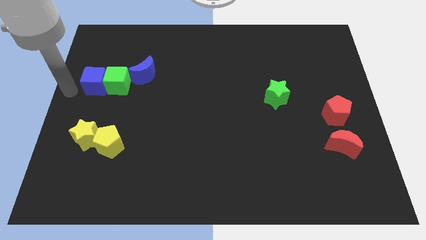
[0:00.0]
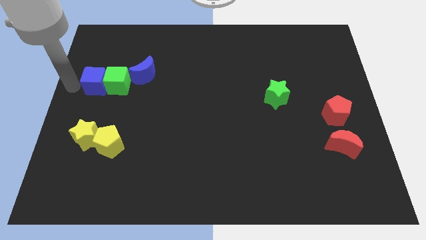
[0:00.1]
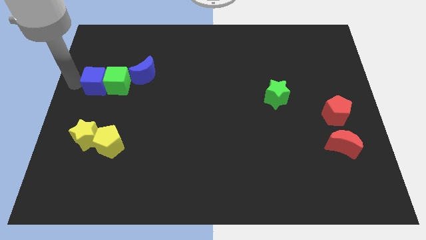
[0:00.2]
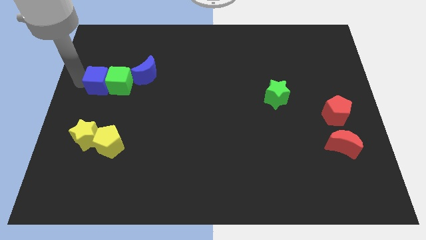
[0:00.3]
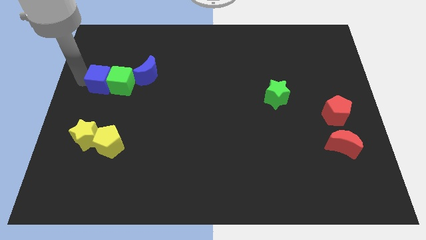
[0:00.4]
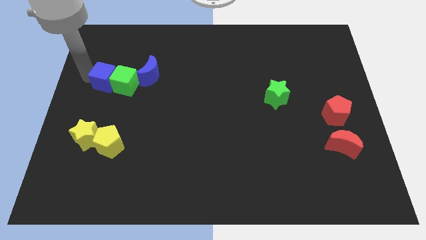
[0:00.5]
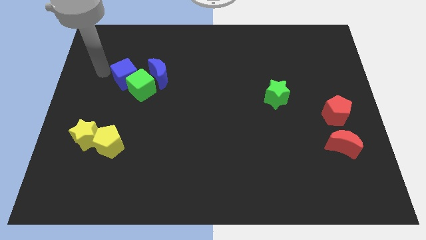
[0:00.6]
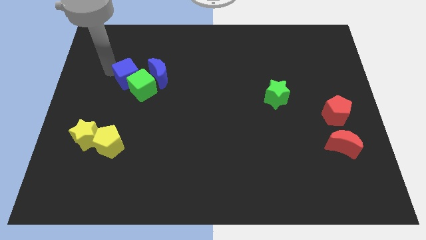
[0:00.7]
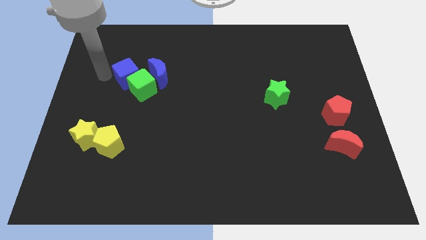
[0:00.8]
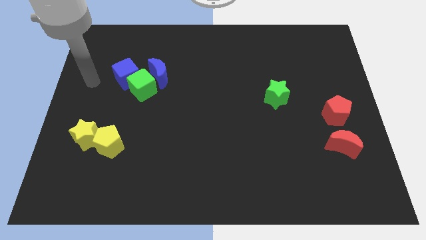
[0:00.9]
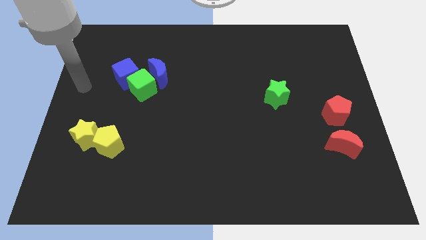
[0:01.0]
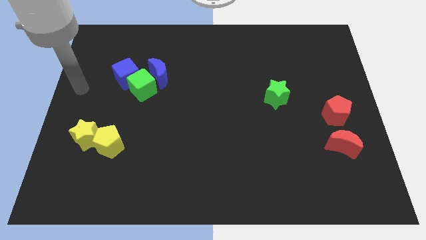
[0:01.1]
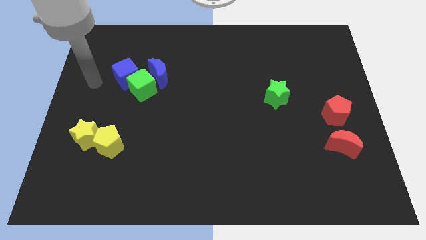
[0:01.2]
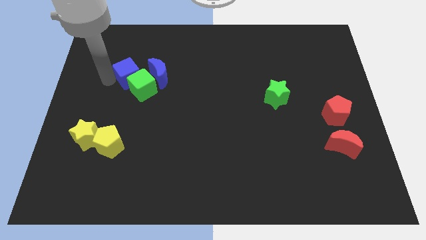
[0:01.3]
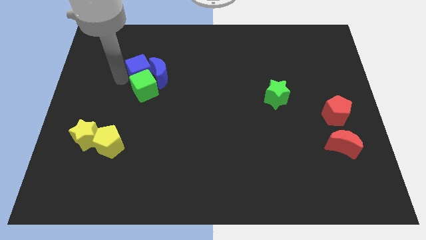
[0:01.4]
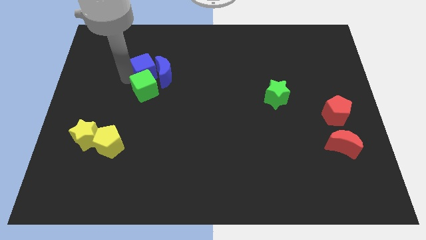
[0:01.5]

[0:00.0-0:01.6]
push the cubes into blue moon above yellow pentagon

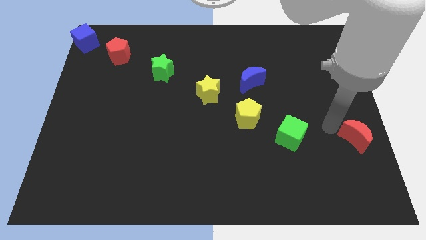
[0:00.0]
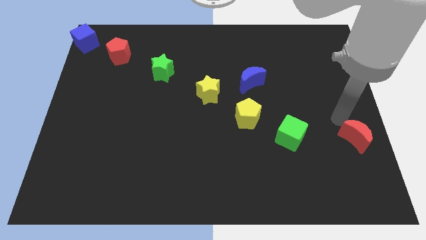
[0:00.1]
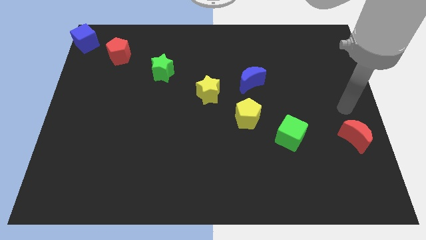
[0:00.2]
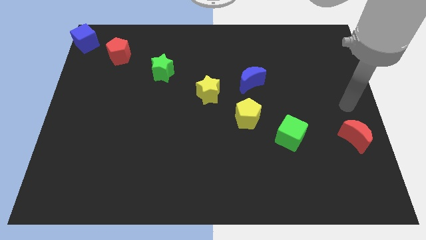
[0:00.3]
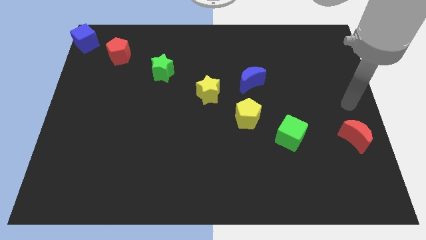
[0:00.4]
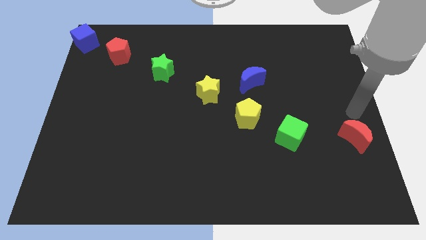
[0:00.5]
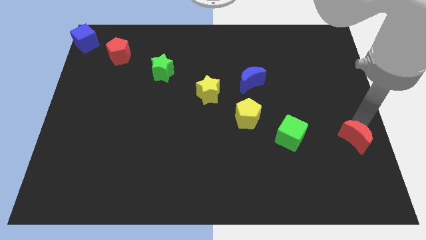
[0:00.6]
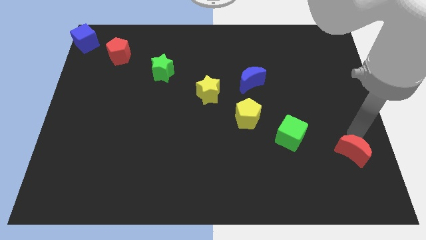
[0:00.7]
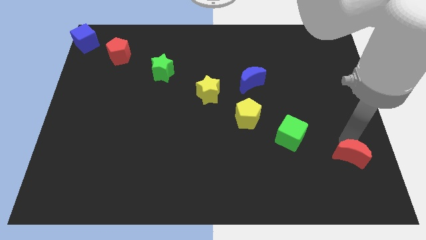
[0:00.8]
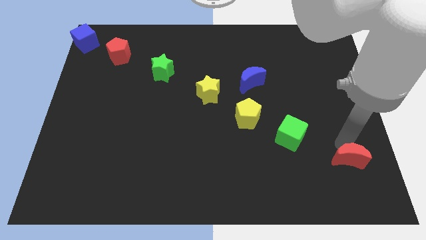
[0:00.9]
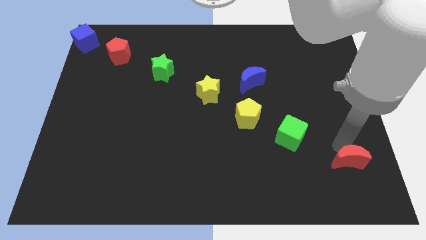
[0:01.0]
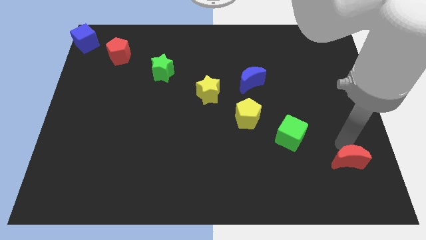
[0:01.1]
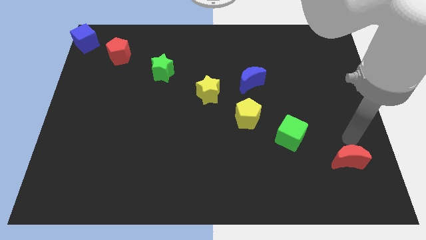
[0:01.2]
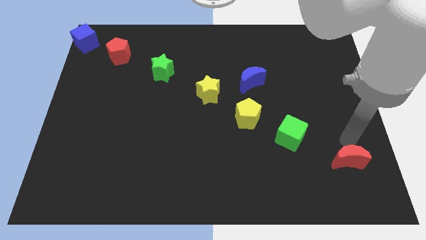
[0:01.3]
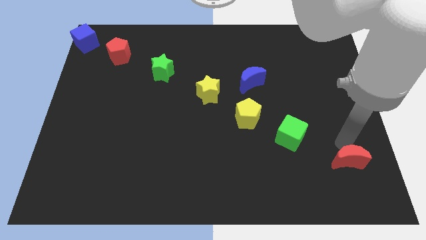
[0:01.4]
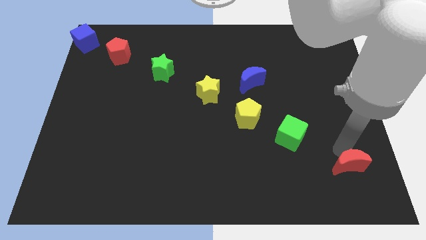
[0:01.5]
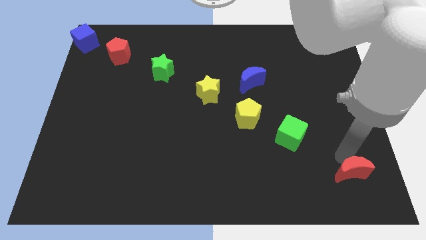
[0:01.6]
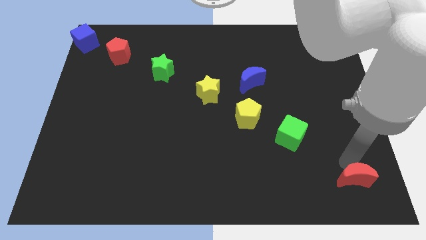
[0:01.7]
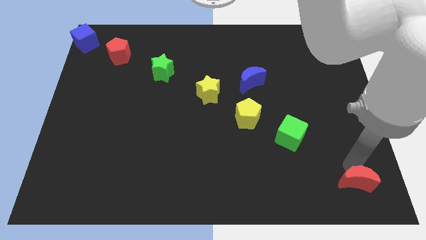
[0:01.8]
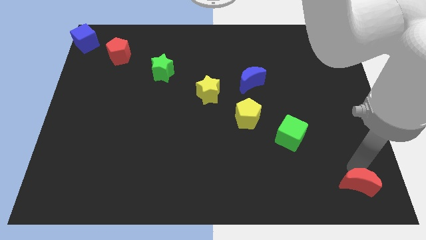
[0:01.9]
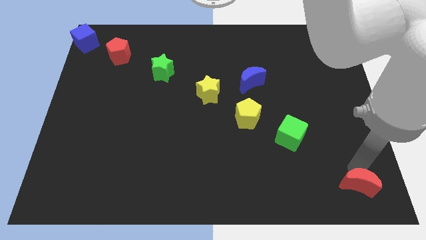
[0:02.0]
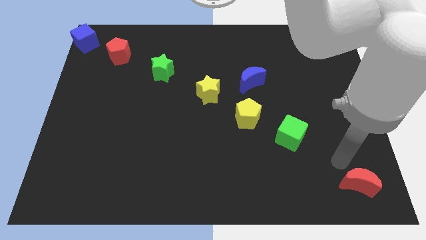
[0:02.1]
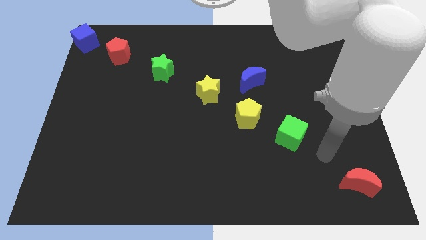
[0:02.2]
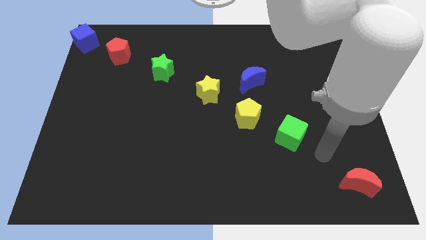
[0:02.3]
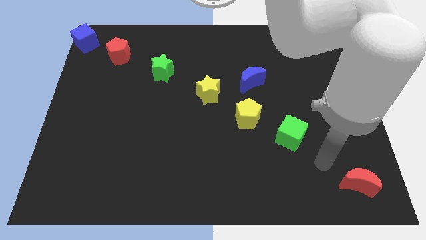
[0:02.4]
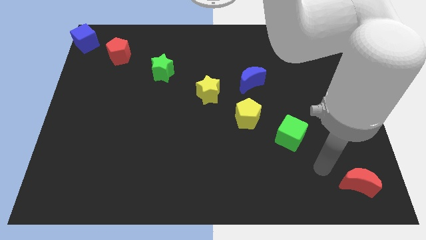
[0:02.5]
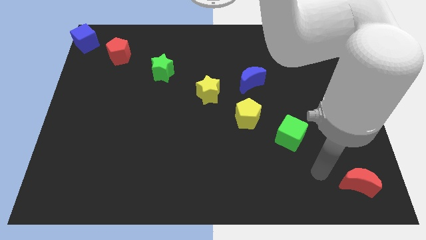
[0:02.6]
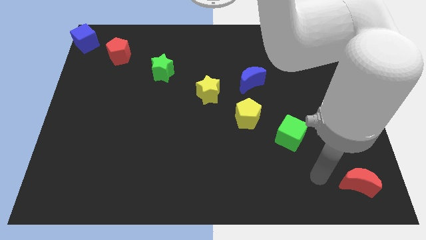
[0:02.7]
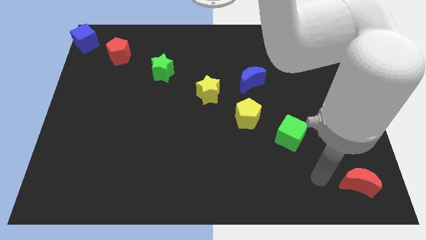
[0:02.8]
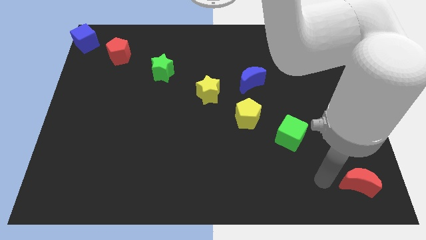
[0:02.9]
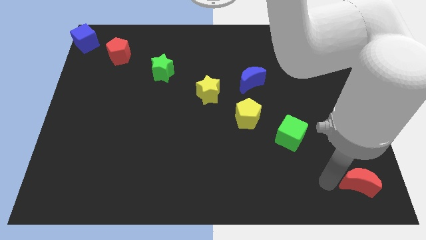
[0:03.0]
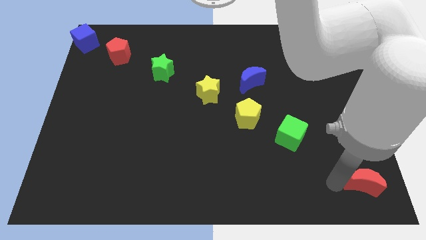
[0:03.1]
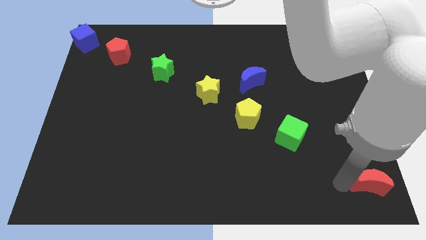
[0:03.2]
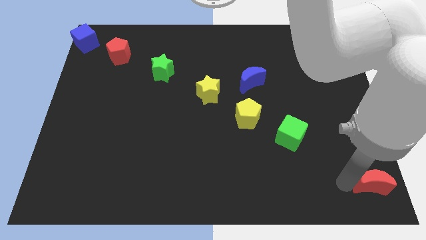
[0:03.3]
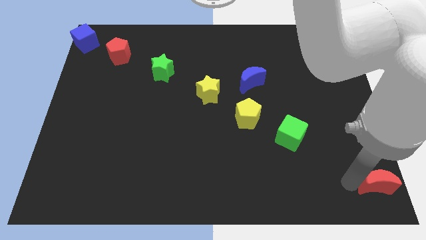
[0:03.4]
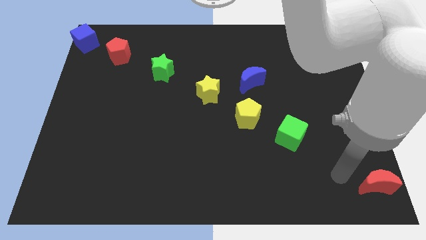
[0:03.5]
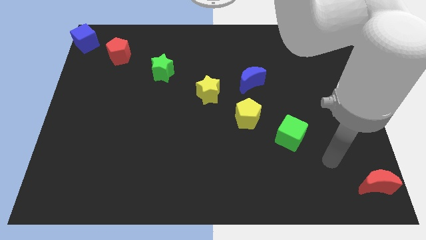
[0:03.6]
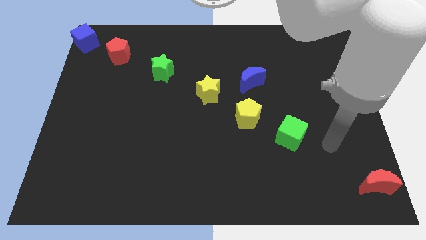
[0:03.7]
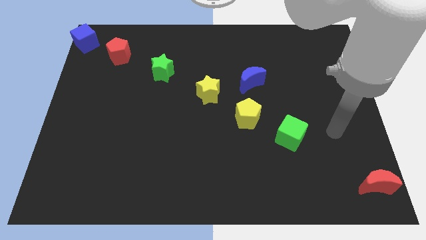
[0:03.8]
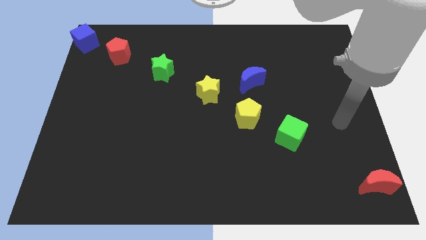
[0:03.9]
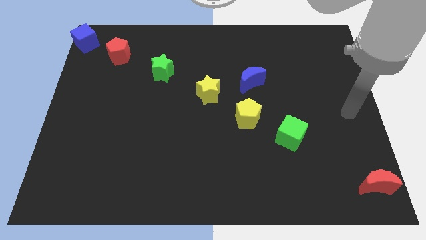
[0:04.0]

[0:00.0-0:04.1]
push the red crescent to the bottom right corner of the board

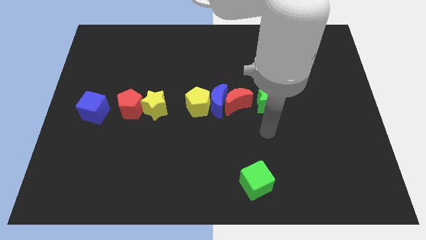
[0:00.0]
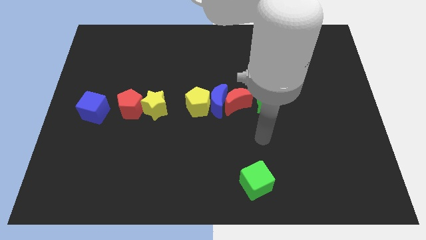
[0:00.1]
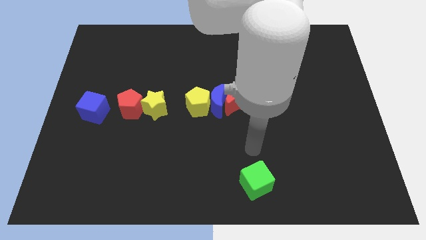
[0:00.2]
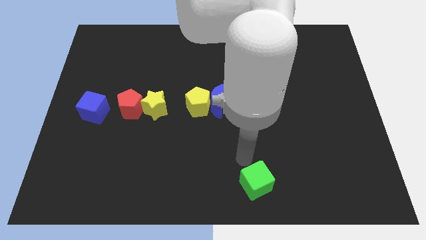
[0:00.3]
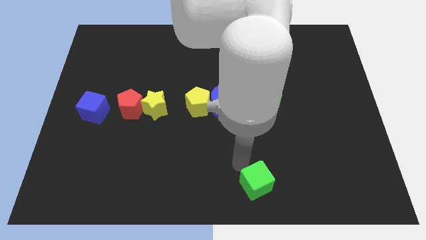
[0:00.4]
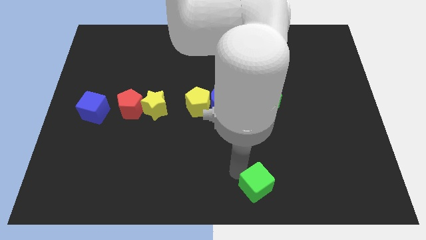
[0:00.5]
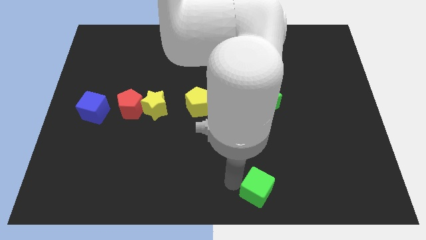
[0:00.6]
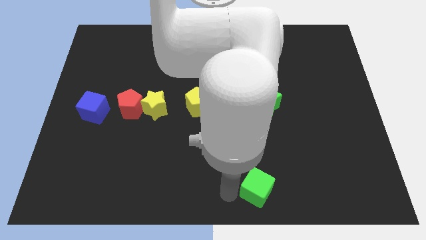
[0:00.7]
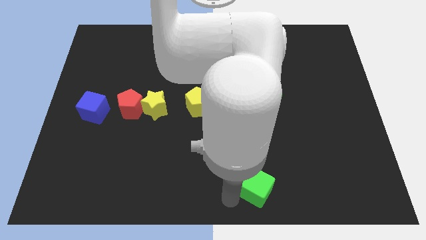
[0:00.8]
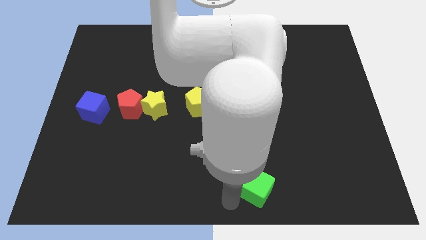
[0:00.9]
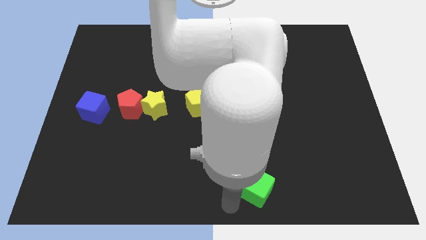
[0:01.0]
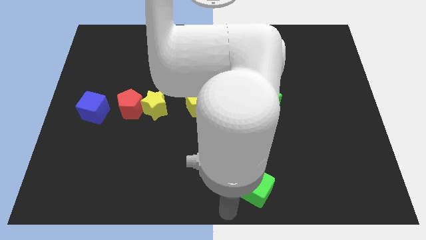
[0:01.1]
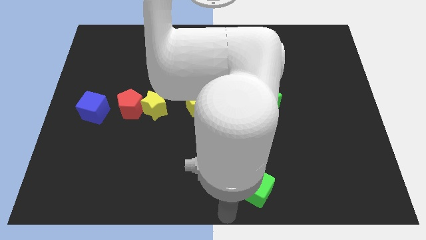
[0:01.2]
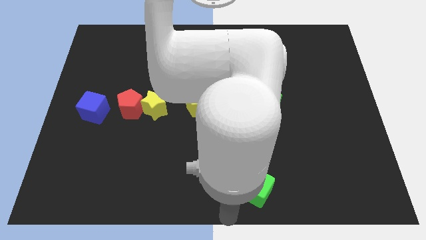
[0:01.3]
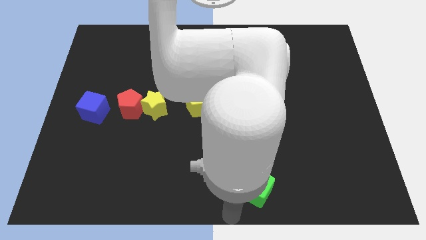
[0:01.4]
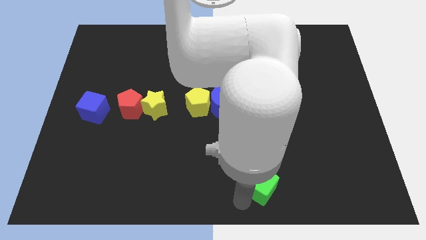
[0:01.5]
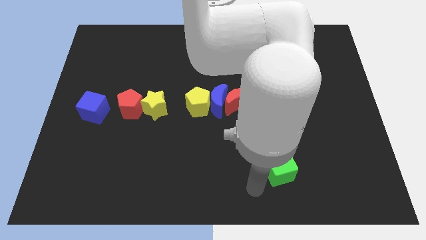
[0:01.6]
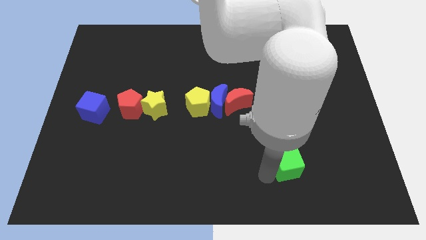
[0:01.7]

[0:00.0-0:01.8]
slightly push the green cube upwards

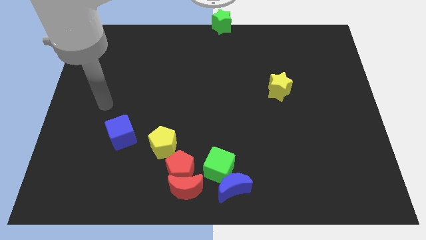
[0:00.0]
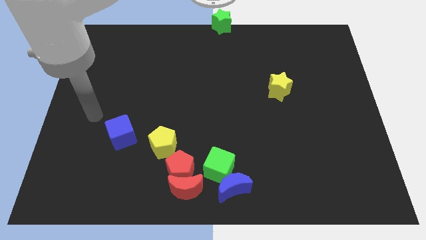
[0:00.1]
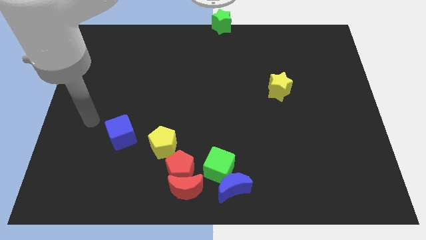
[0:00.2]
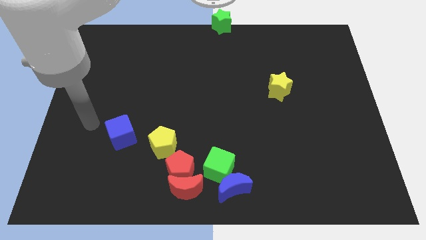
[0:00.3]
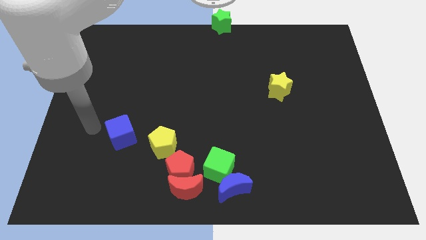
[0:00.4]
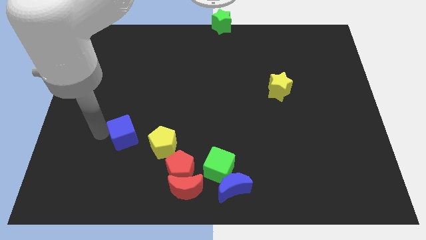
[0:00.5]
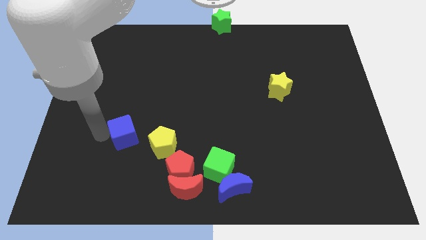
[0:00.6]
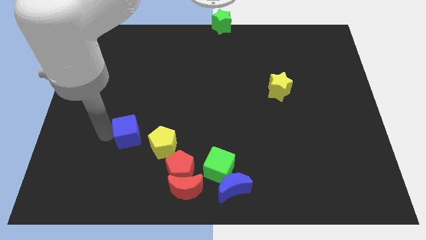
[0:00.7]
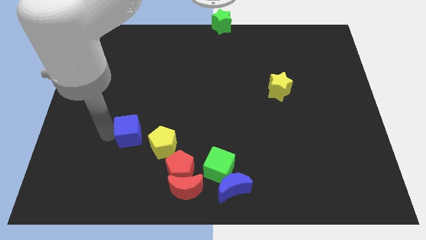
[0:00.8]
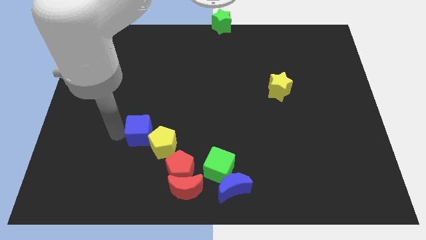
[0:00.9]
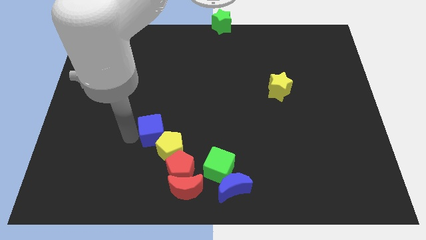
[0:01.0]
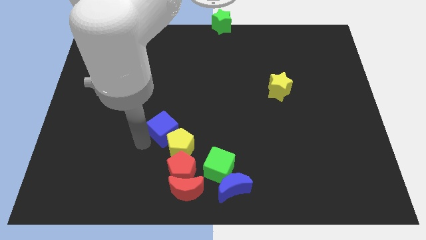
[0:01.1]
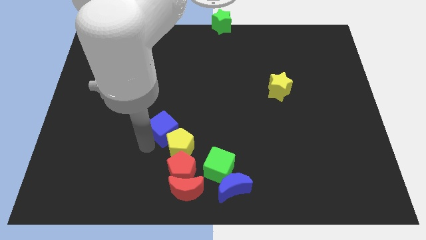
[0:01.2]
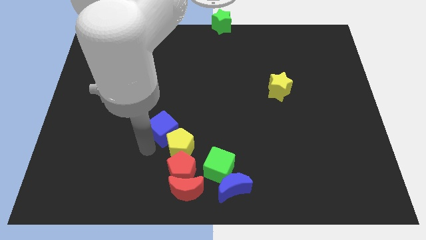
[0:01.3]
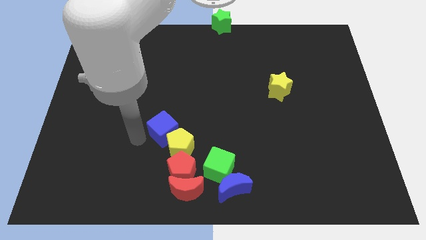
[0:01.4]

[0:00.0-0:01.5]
move the blue cube into the yellow pentagon

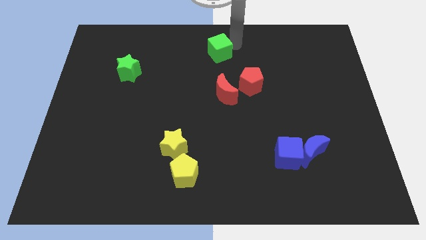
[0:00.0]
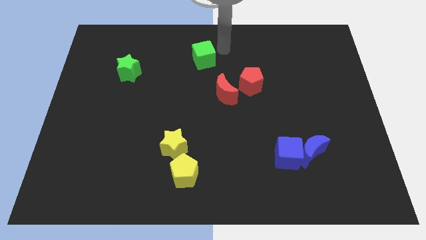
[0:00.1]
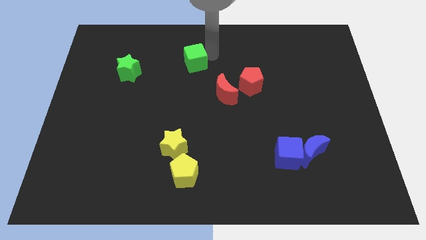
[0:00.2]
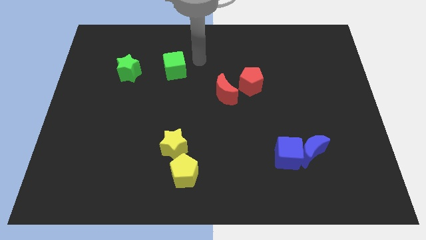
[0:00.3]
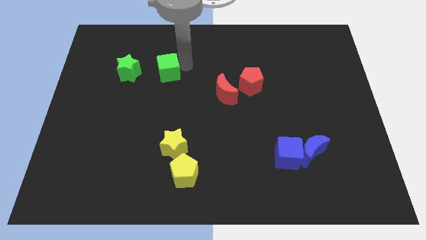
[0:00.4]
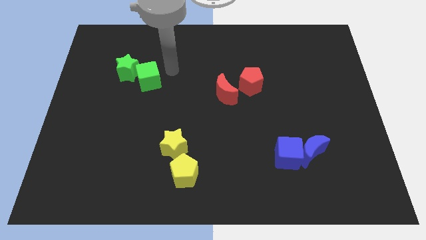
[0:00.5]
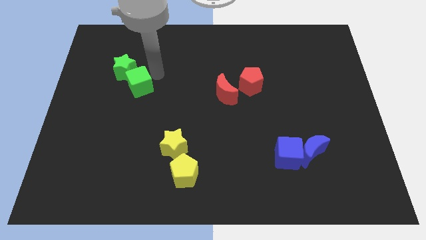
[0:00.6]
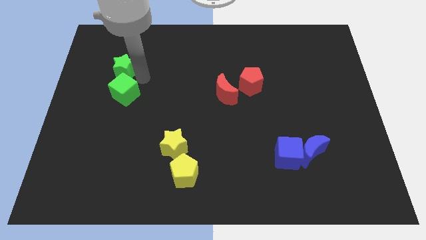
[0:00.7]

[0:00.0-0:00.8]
place the green cube to the left of the red crescent
